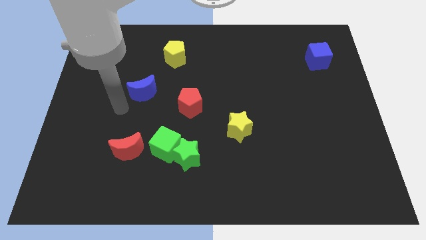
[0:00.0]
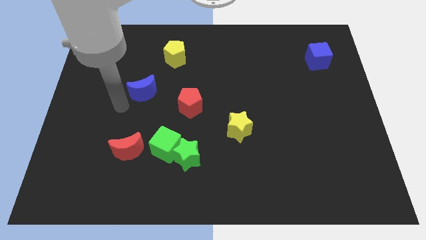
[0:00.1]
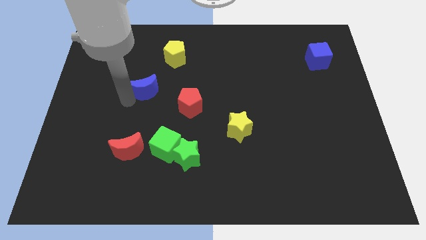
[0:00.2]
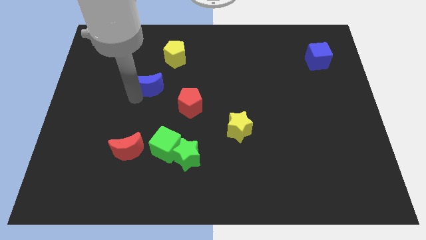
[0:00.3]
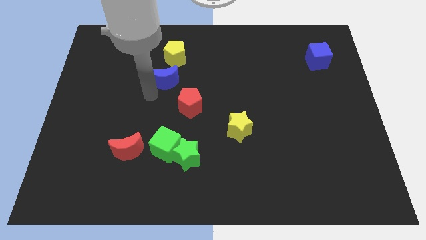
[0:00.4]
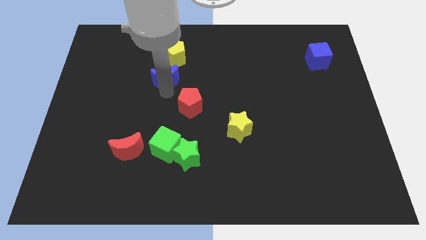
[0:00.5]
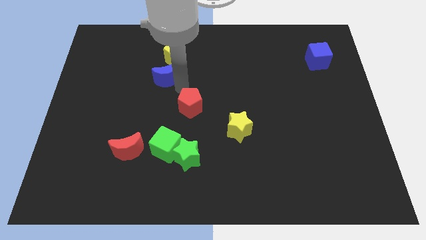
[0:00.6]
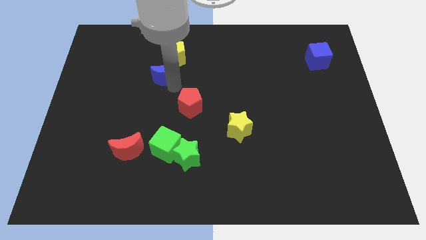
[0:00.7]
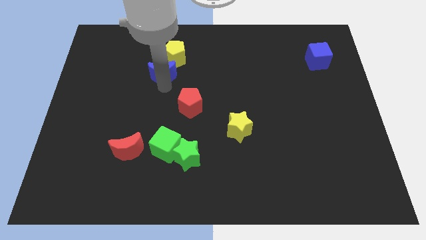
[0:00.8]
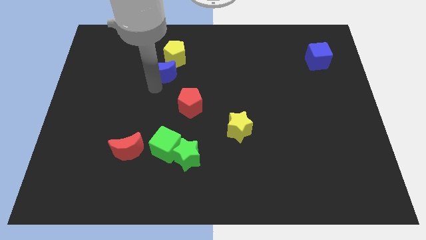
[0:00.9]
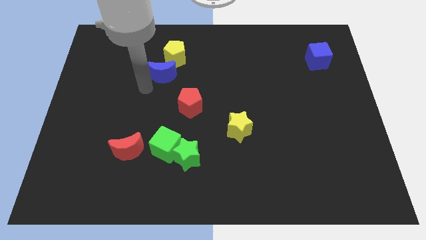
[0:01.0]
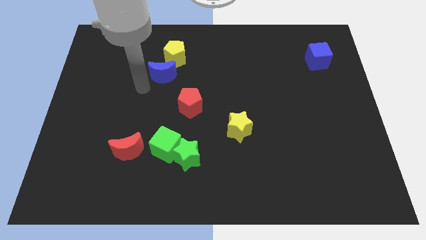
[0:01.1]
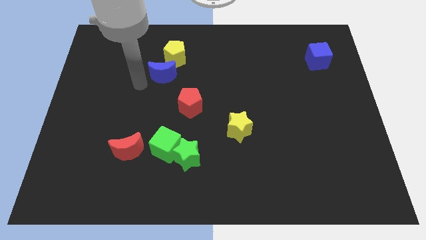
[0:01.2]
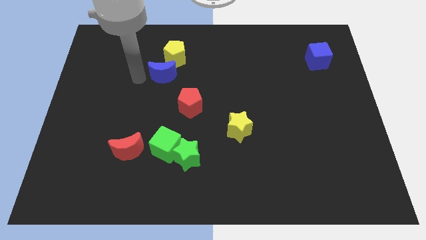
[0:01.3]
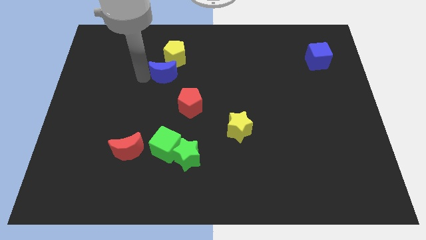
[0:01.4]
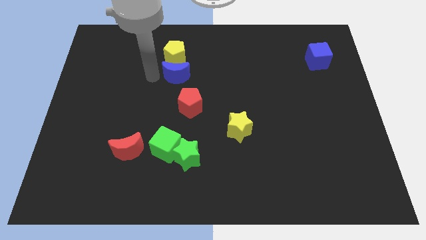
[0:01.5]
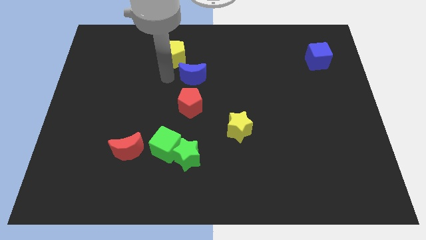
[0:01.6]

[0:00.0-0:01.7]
push the blue crescent to the bottom of the yellow pentagon

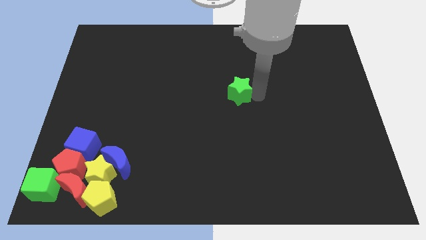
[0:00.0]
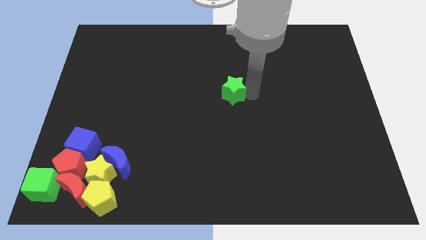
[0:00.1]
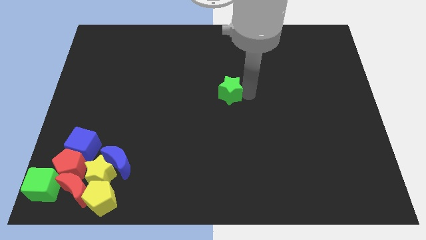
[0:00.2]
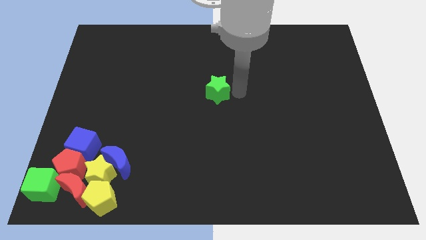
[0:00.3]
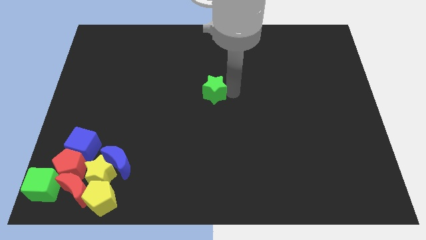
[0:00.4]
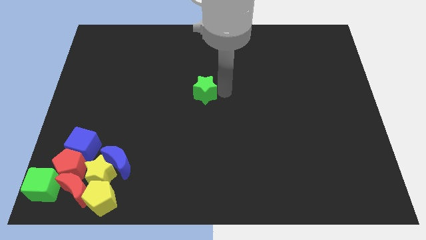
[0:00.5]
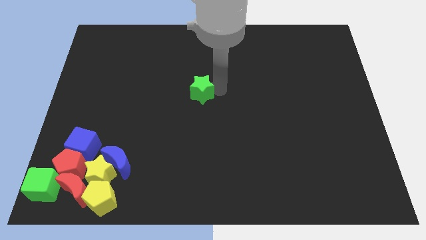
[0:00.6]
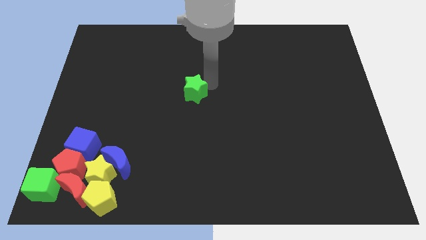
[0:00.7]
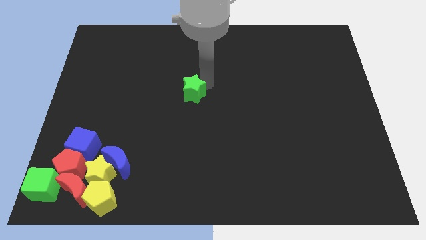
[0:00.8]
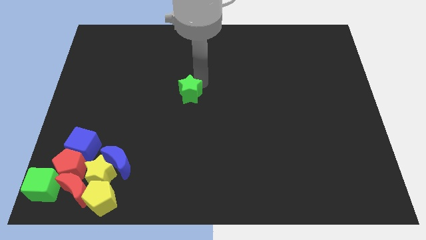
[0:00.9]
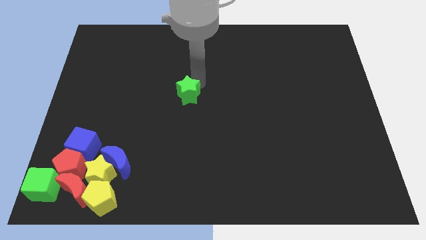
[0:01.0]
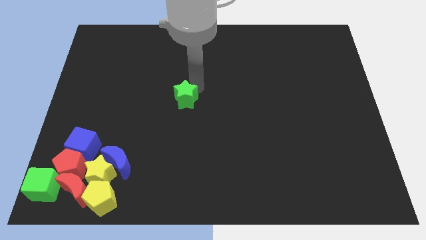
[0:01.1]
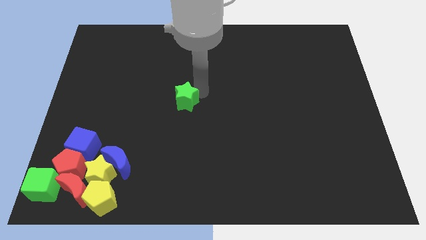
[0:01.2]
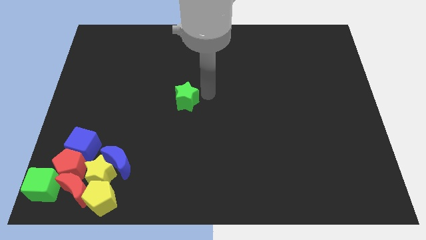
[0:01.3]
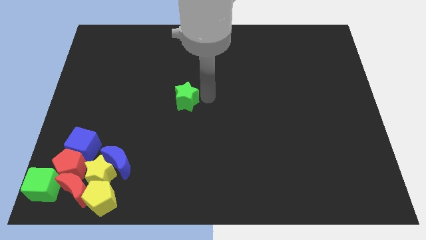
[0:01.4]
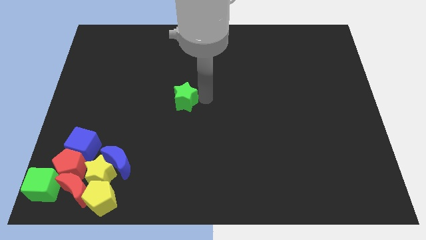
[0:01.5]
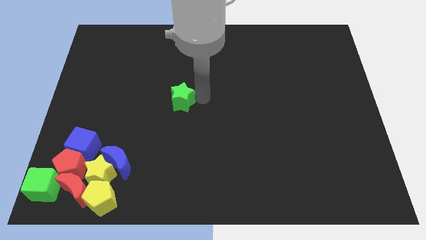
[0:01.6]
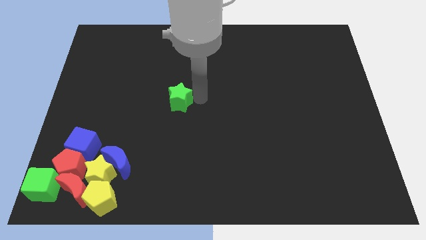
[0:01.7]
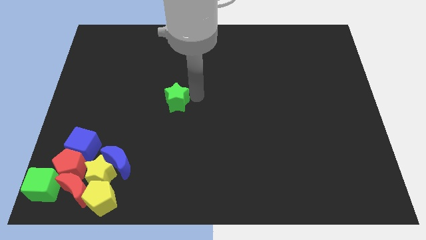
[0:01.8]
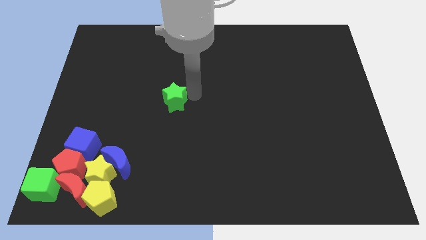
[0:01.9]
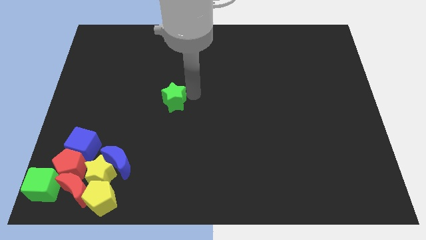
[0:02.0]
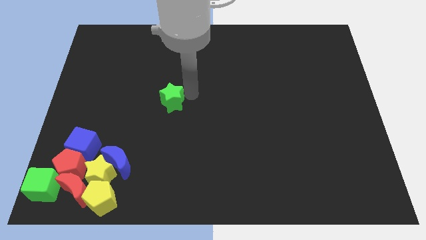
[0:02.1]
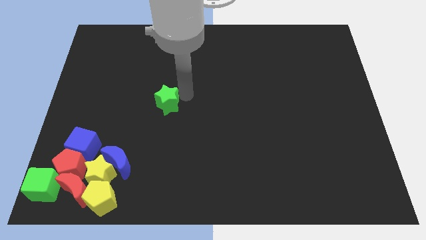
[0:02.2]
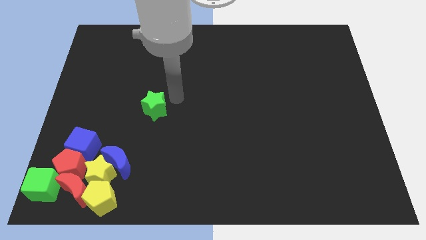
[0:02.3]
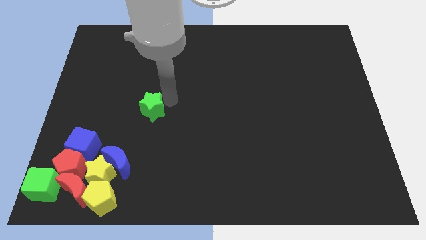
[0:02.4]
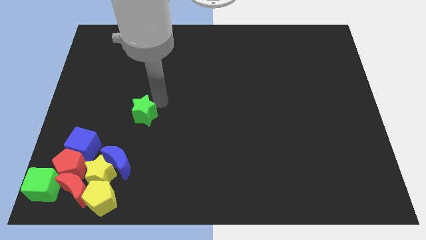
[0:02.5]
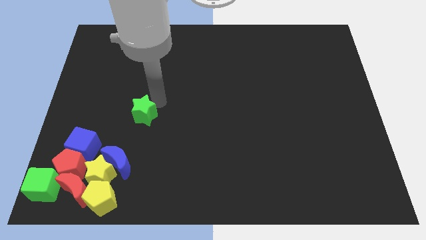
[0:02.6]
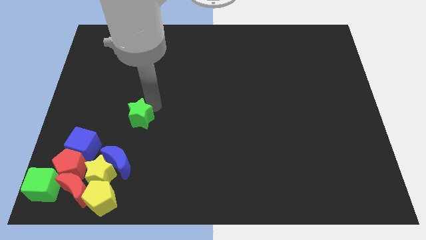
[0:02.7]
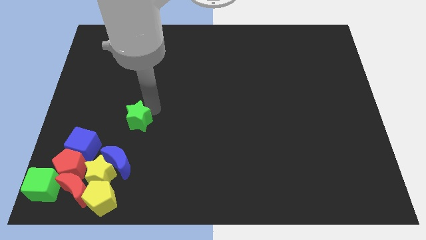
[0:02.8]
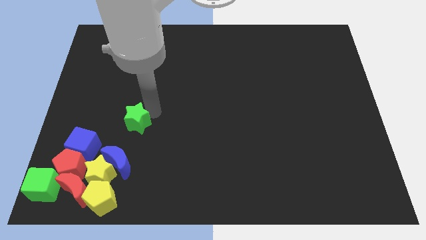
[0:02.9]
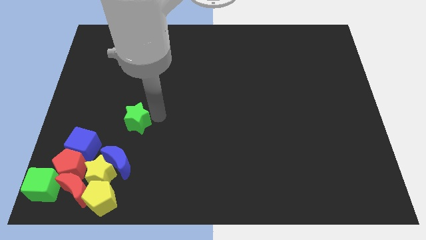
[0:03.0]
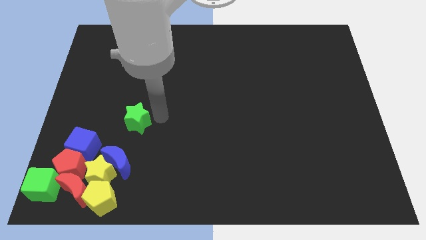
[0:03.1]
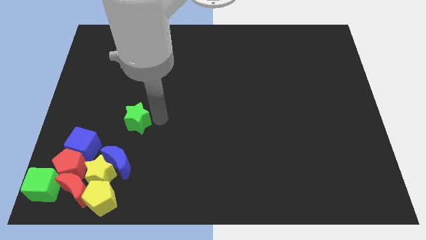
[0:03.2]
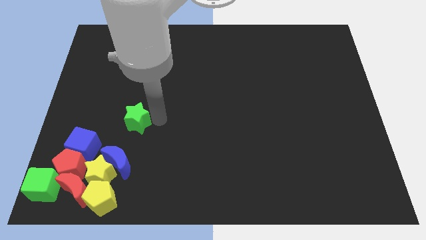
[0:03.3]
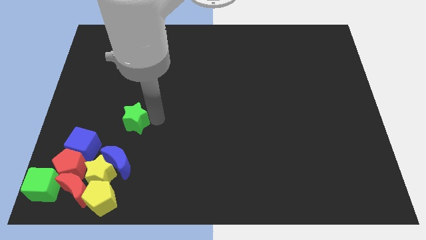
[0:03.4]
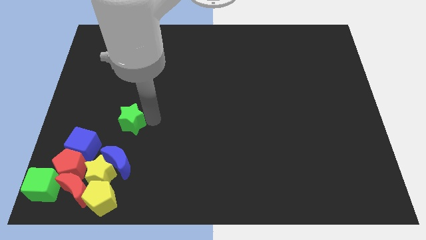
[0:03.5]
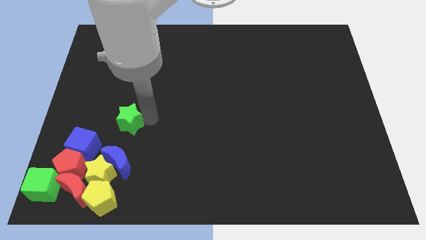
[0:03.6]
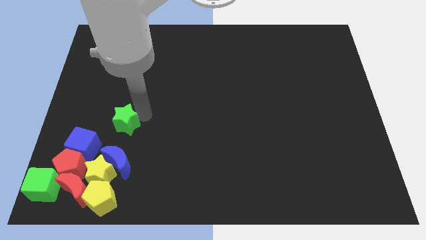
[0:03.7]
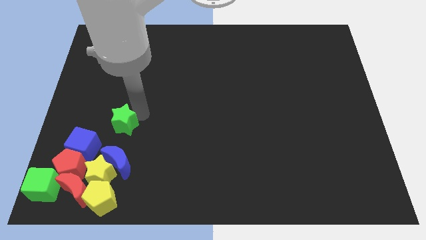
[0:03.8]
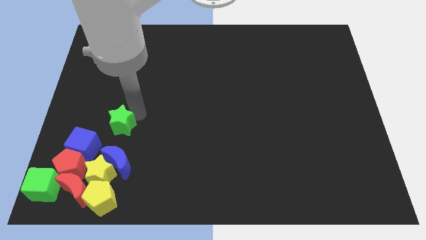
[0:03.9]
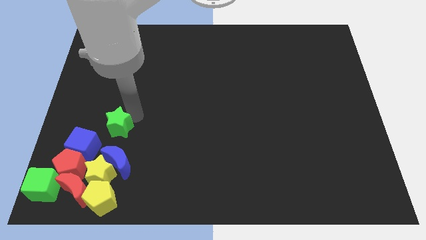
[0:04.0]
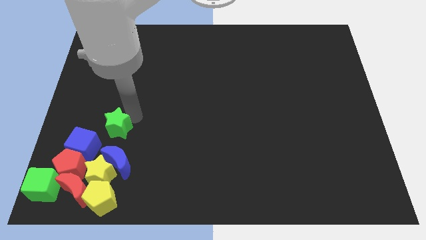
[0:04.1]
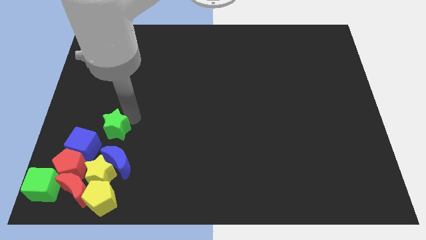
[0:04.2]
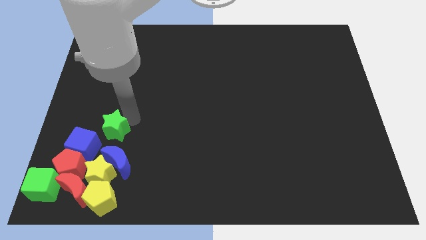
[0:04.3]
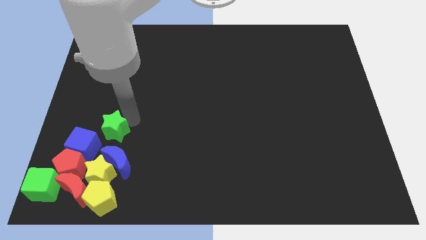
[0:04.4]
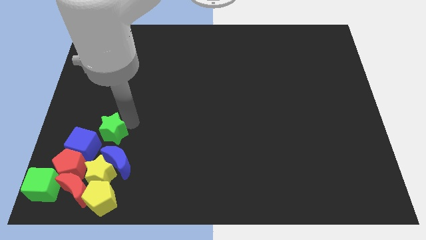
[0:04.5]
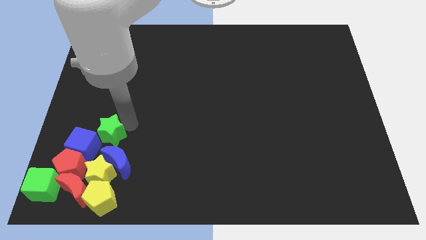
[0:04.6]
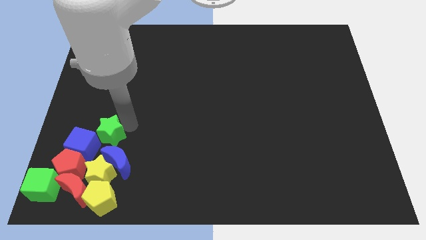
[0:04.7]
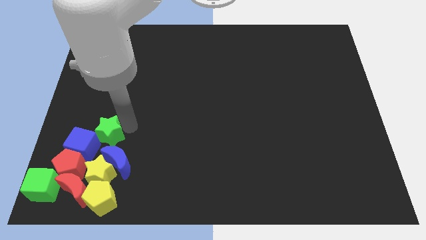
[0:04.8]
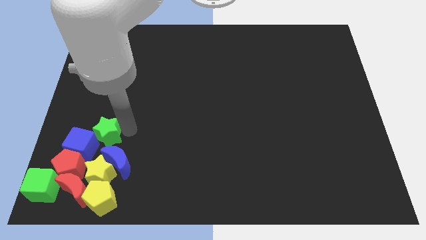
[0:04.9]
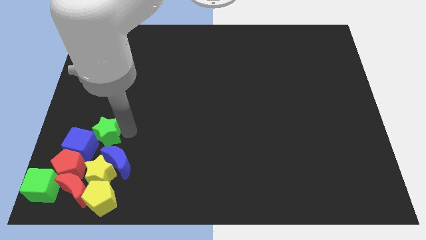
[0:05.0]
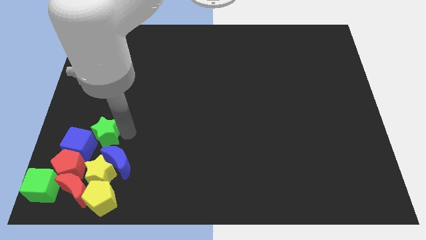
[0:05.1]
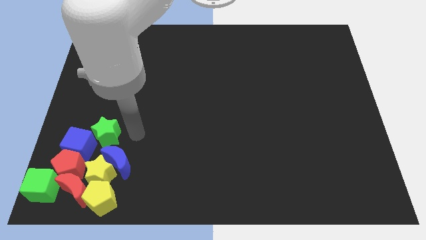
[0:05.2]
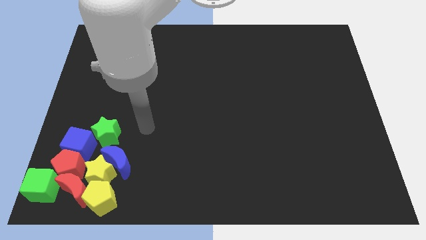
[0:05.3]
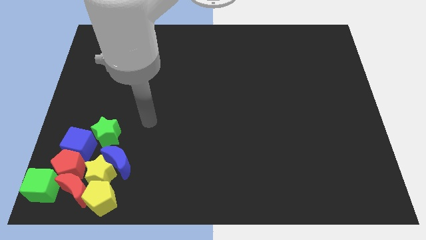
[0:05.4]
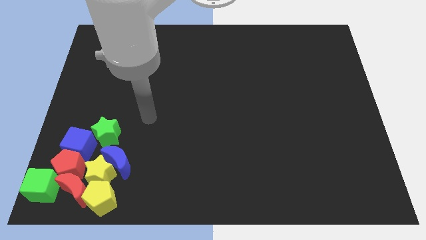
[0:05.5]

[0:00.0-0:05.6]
push the green star into the blue cube

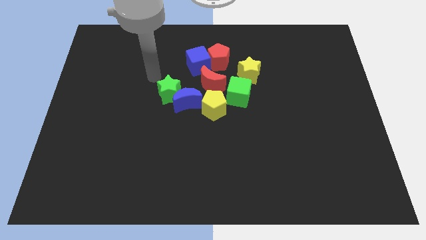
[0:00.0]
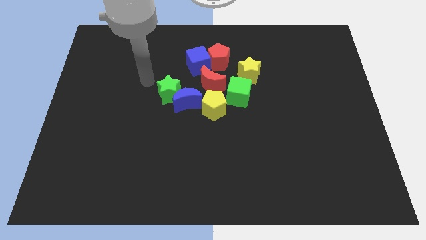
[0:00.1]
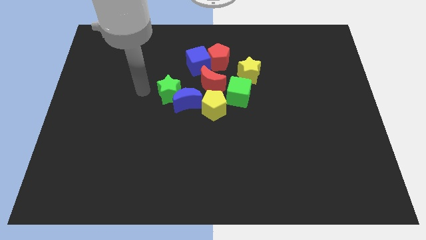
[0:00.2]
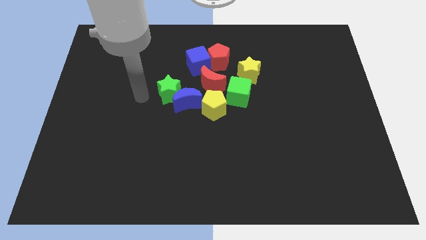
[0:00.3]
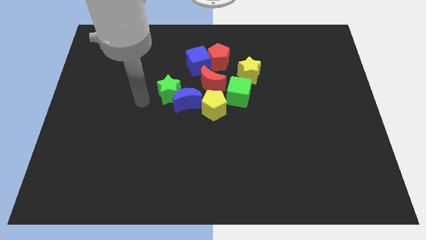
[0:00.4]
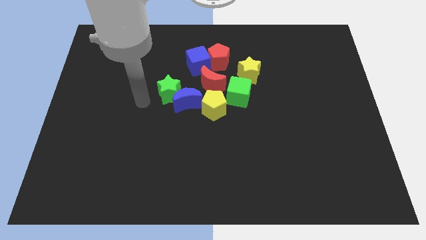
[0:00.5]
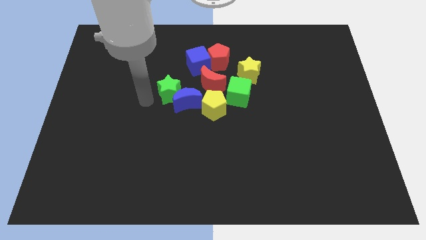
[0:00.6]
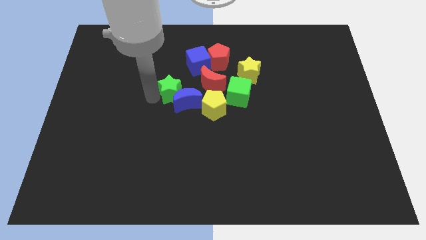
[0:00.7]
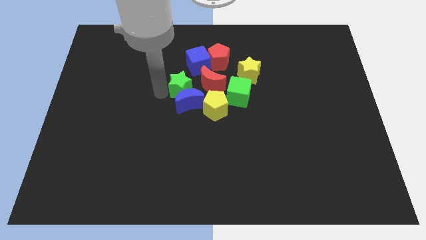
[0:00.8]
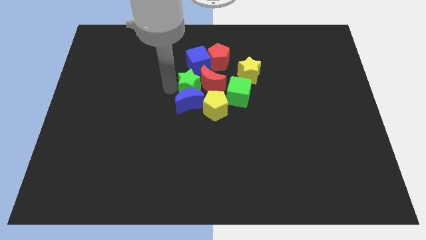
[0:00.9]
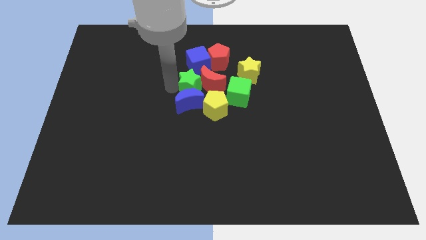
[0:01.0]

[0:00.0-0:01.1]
move the green star into the red moon

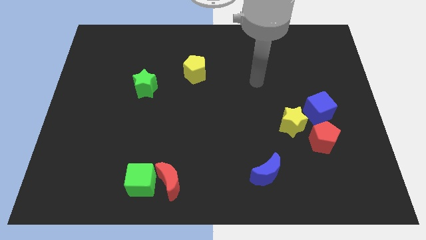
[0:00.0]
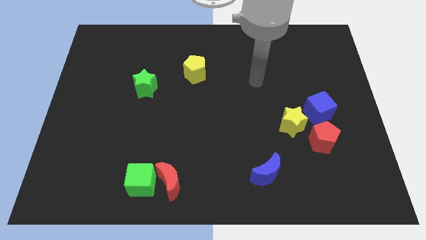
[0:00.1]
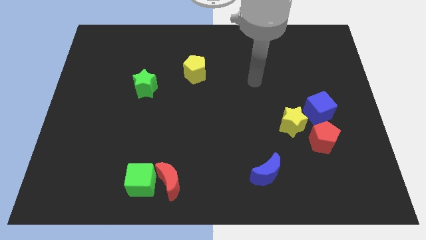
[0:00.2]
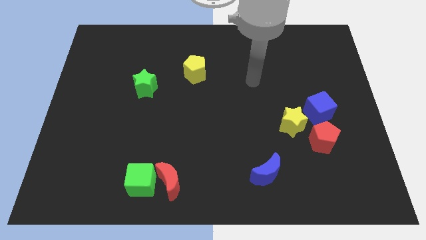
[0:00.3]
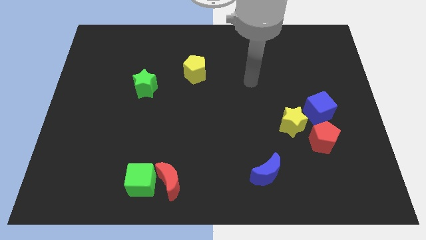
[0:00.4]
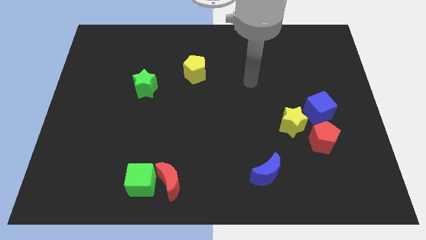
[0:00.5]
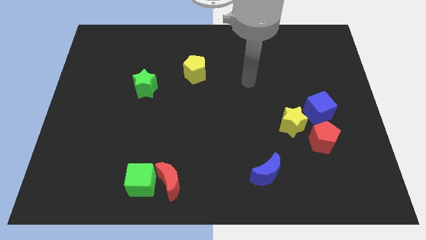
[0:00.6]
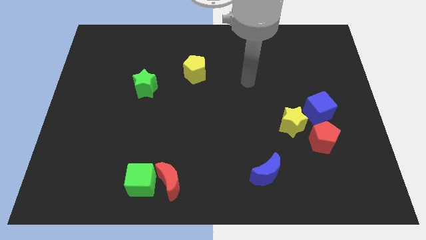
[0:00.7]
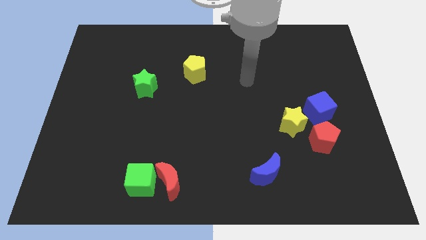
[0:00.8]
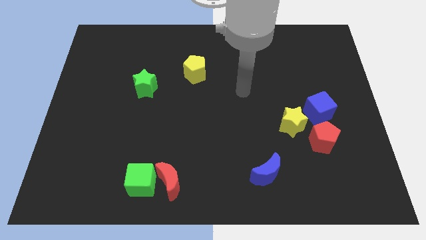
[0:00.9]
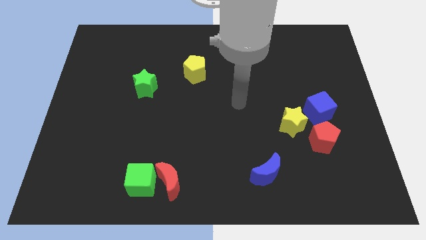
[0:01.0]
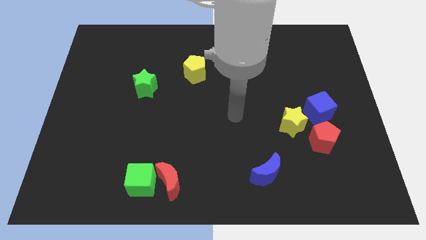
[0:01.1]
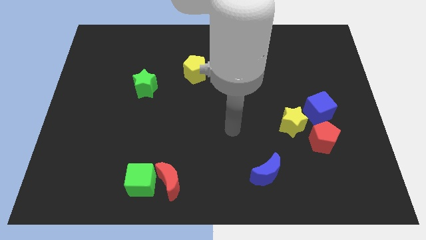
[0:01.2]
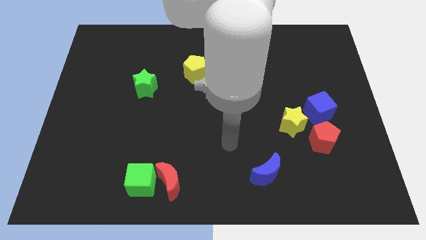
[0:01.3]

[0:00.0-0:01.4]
place your hand in between yellow pentagon and blue crescent
